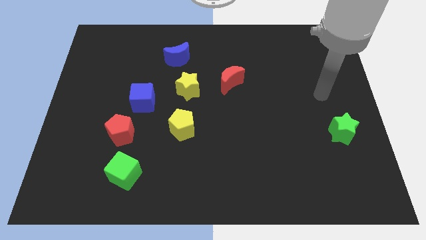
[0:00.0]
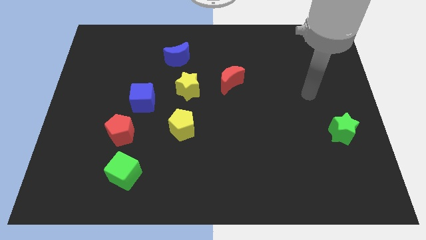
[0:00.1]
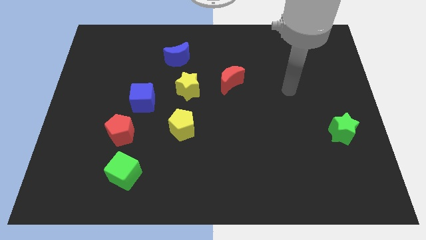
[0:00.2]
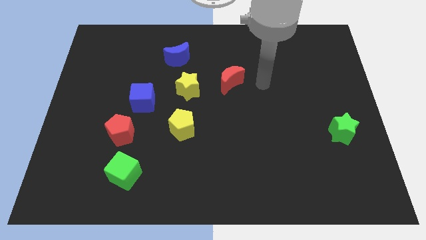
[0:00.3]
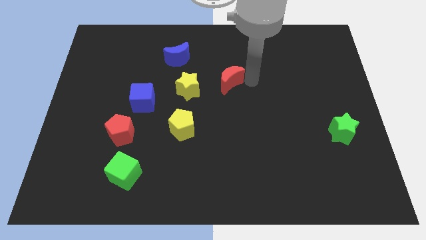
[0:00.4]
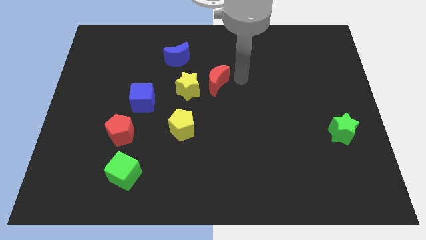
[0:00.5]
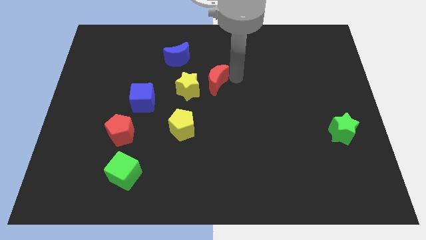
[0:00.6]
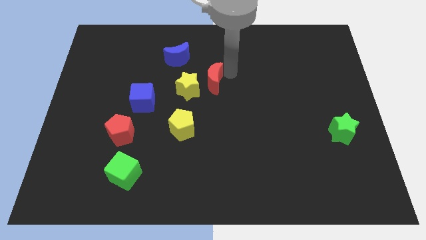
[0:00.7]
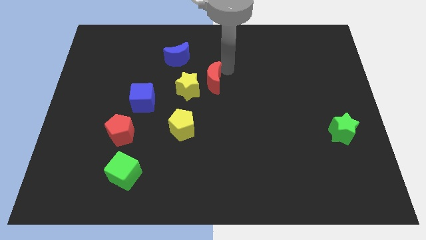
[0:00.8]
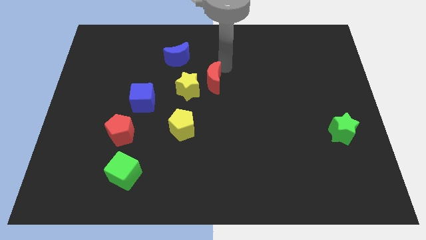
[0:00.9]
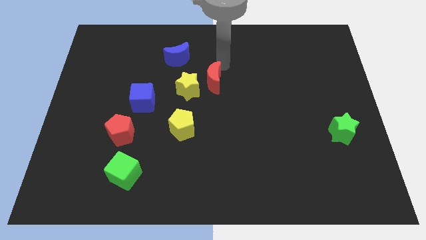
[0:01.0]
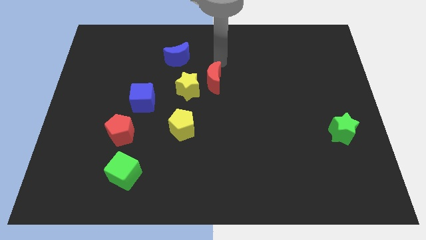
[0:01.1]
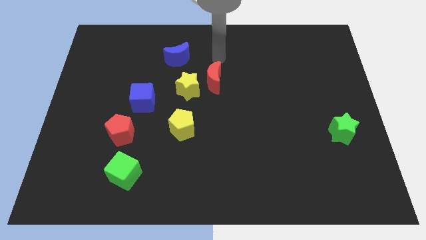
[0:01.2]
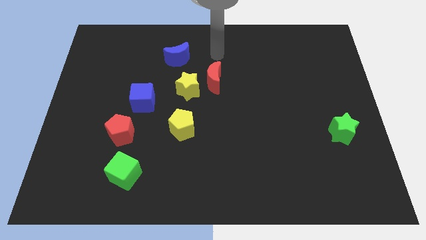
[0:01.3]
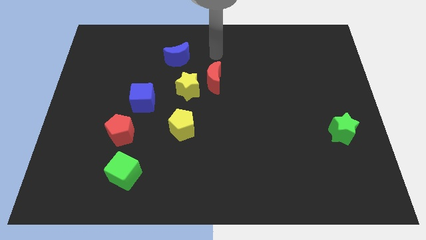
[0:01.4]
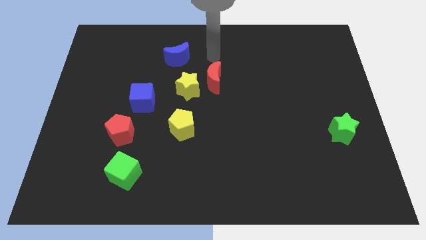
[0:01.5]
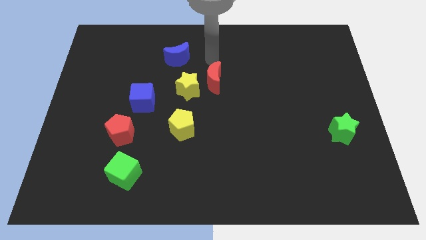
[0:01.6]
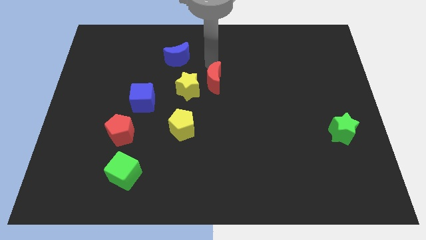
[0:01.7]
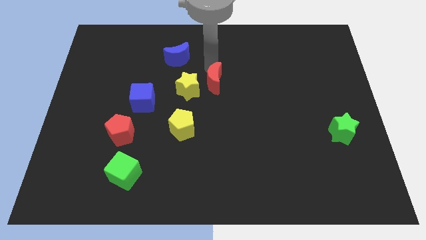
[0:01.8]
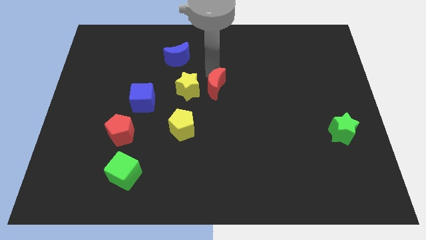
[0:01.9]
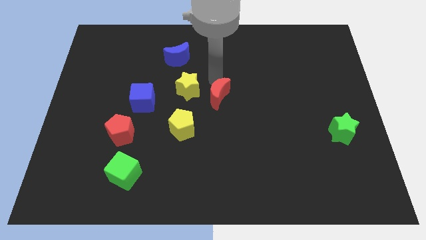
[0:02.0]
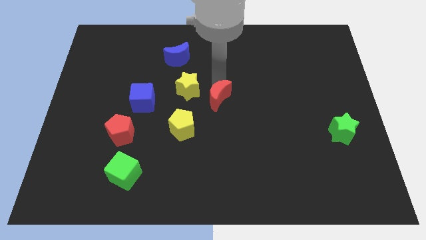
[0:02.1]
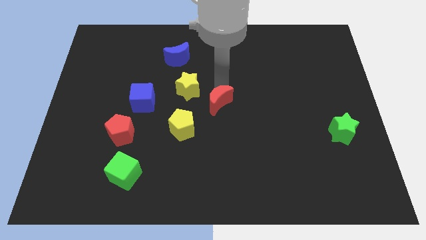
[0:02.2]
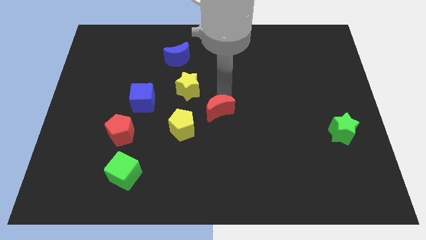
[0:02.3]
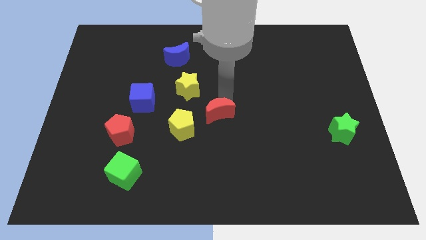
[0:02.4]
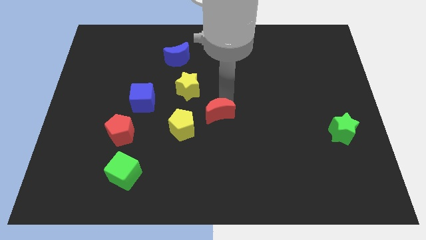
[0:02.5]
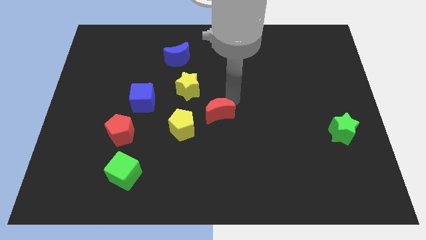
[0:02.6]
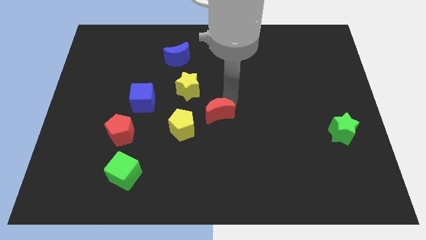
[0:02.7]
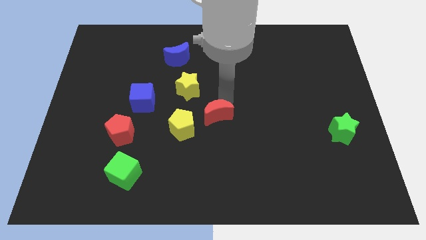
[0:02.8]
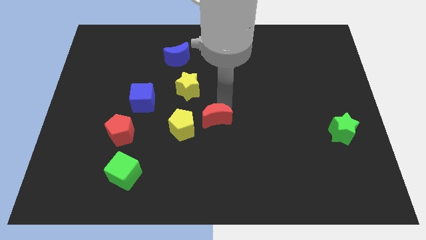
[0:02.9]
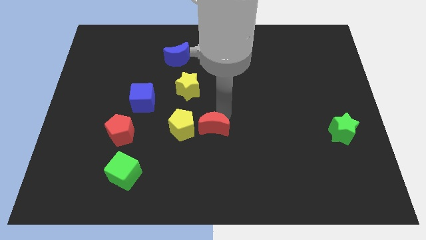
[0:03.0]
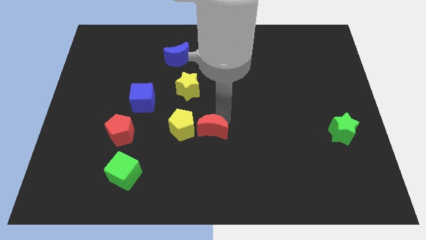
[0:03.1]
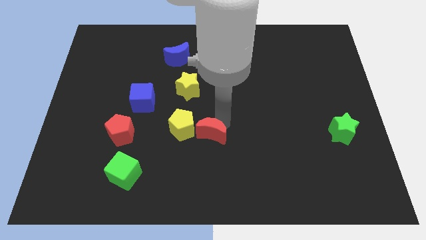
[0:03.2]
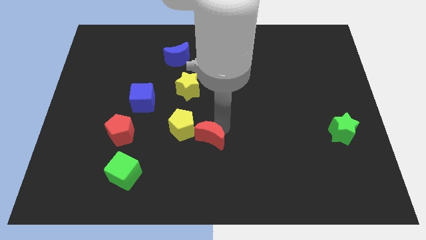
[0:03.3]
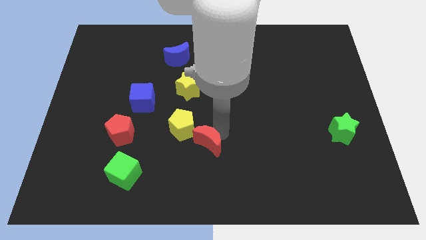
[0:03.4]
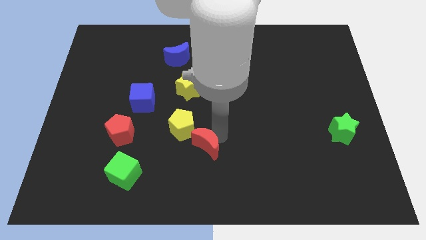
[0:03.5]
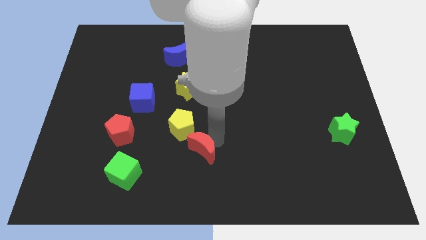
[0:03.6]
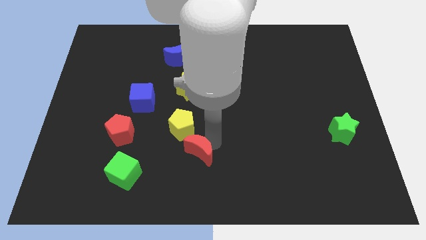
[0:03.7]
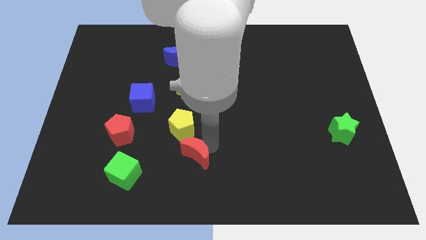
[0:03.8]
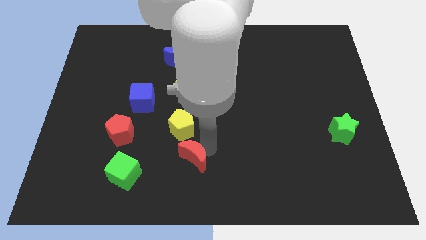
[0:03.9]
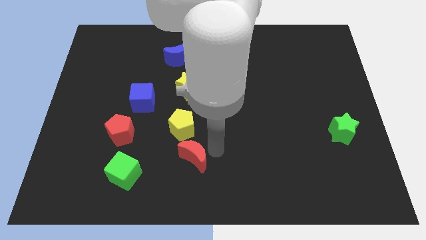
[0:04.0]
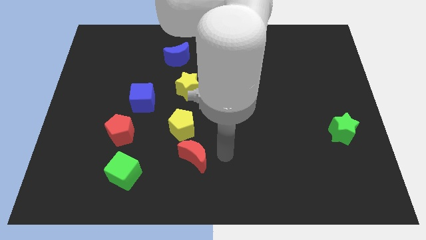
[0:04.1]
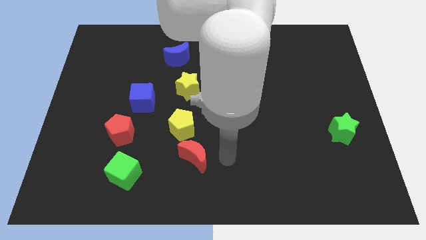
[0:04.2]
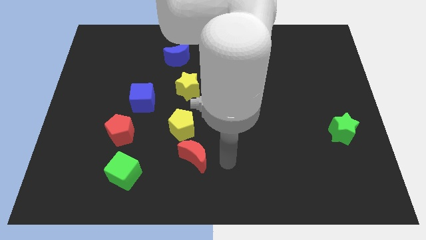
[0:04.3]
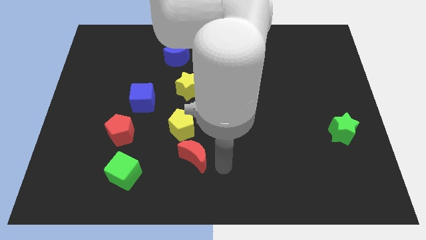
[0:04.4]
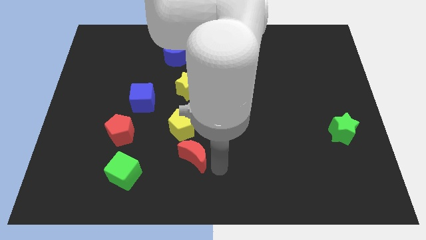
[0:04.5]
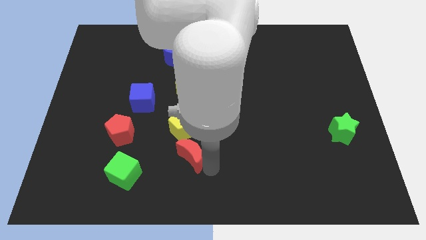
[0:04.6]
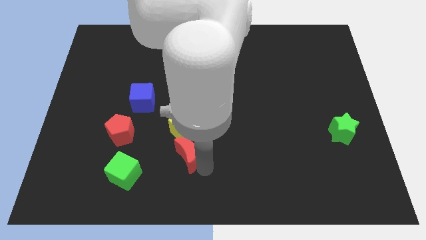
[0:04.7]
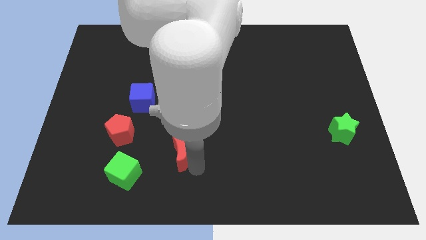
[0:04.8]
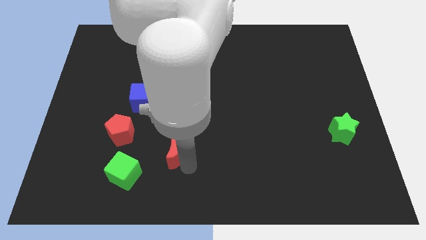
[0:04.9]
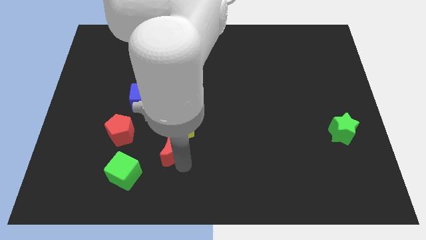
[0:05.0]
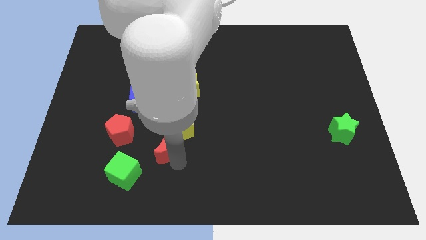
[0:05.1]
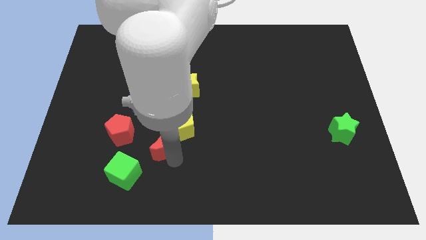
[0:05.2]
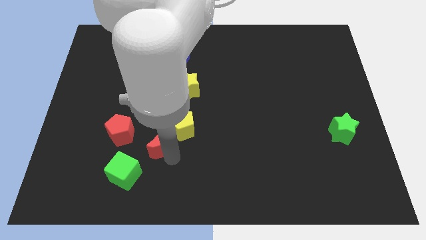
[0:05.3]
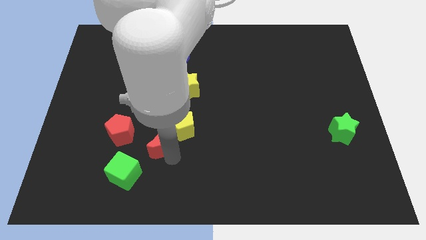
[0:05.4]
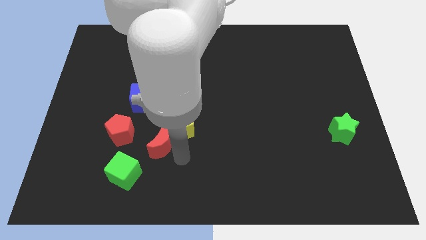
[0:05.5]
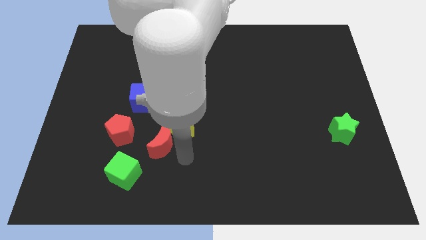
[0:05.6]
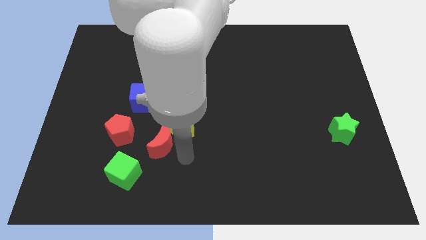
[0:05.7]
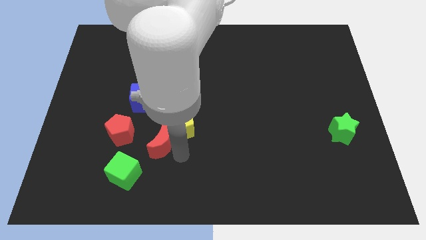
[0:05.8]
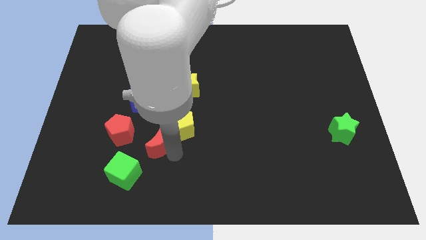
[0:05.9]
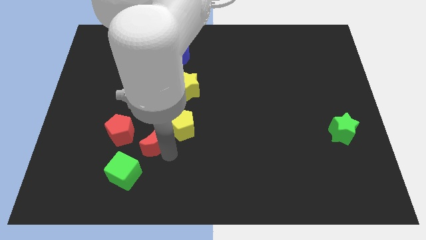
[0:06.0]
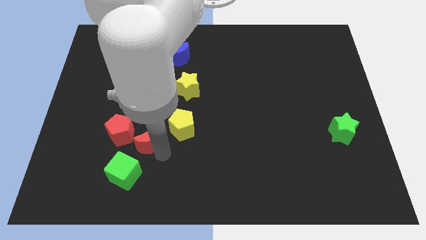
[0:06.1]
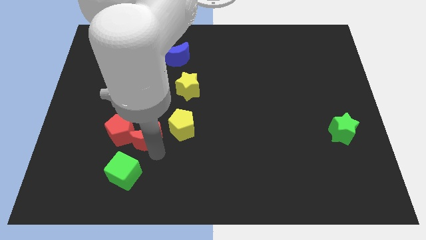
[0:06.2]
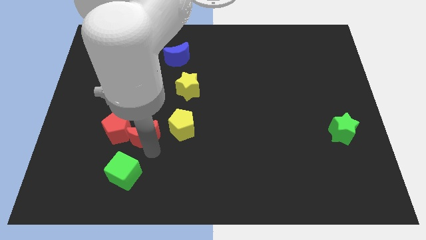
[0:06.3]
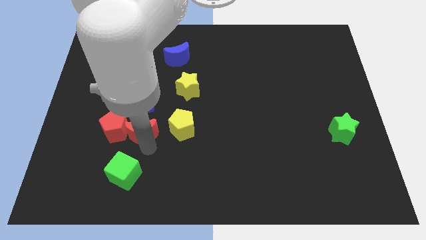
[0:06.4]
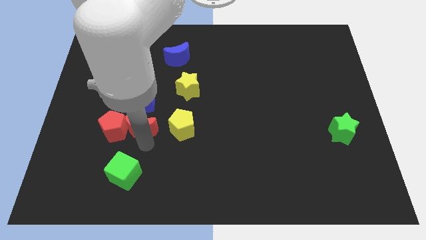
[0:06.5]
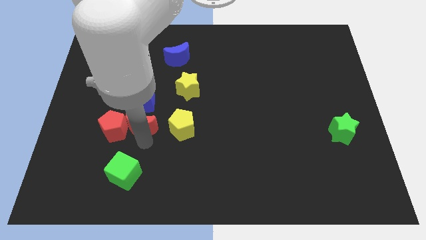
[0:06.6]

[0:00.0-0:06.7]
put the red moon next to the red pentagon

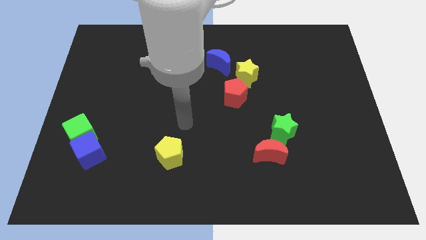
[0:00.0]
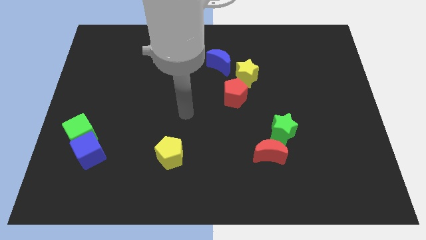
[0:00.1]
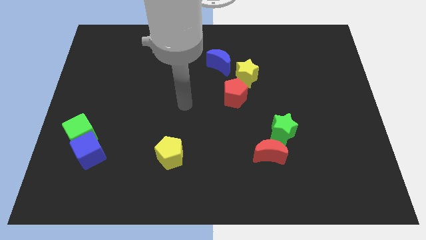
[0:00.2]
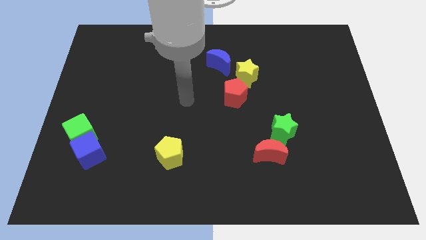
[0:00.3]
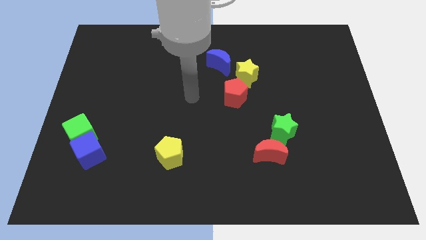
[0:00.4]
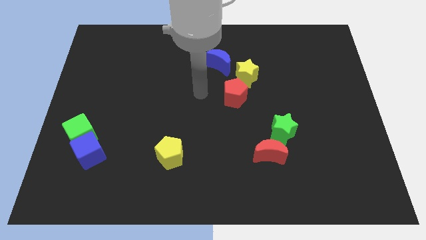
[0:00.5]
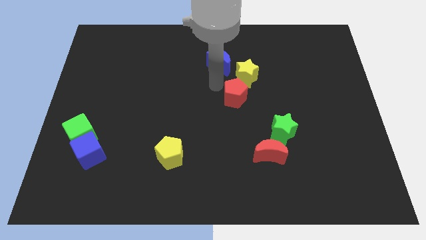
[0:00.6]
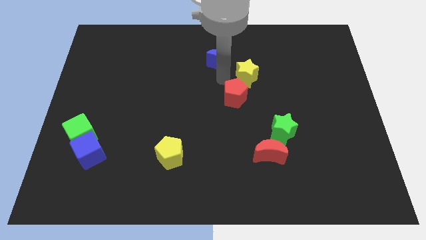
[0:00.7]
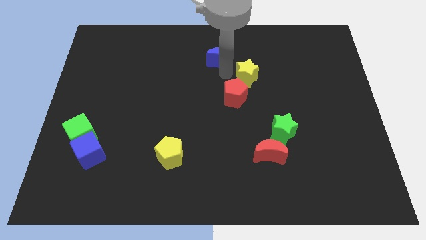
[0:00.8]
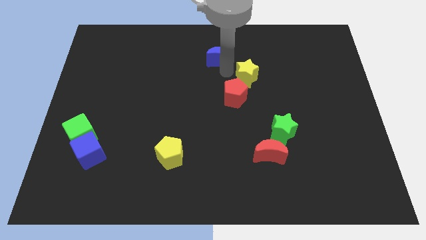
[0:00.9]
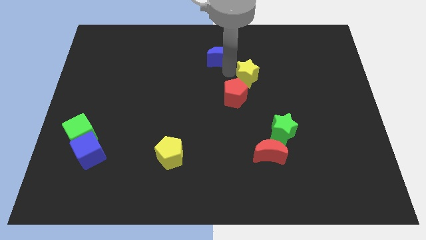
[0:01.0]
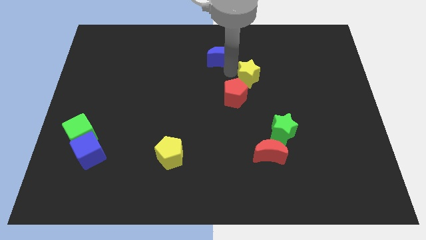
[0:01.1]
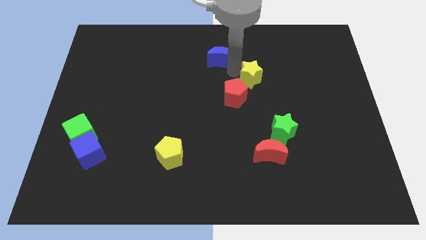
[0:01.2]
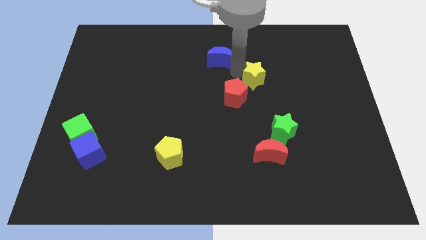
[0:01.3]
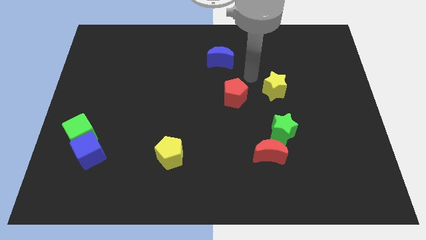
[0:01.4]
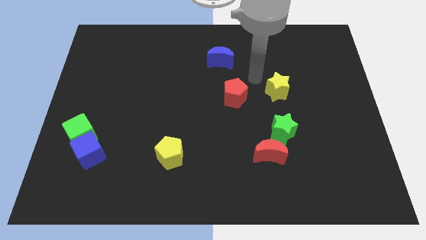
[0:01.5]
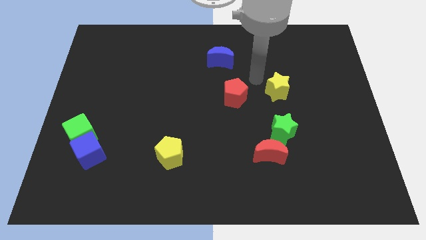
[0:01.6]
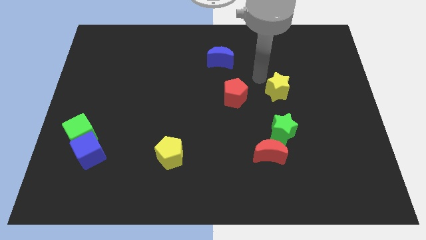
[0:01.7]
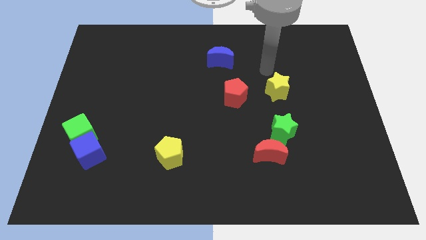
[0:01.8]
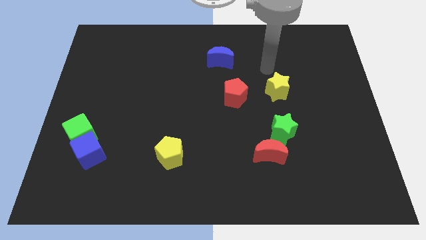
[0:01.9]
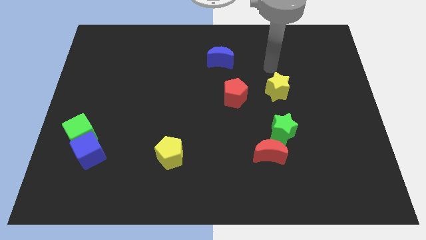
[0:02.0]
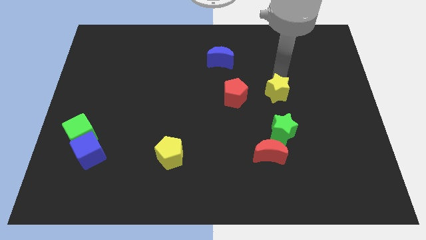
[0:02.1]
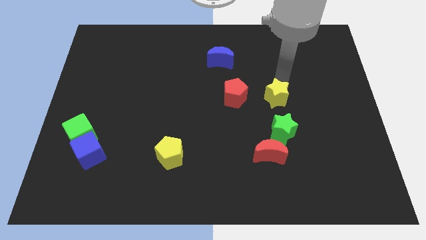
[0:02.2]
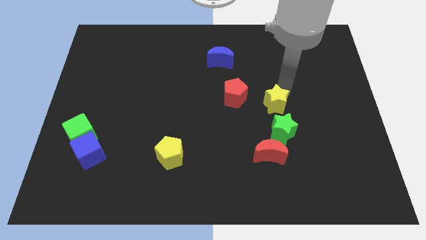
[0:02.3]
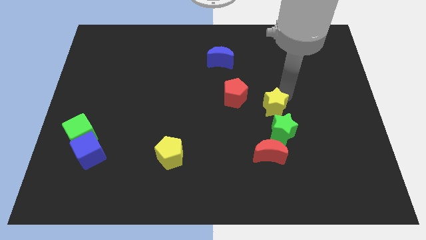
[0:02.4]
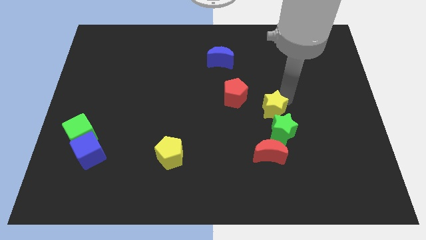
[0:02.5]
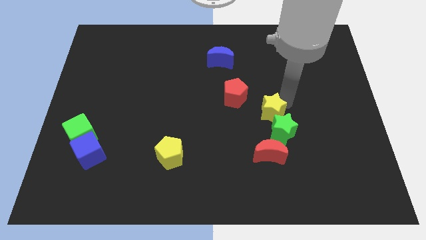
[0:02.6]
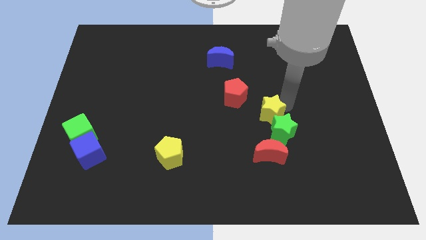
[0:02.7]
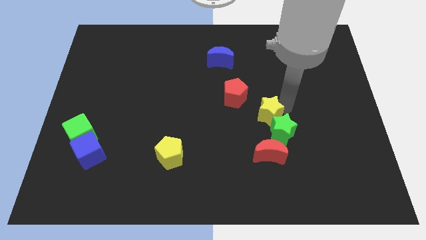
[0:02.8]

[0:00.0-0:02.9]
slide the yellow star to the green star
